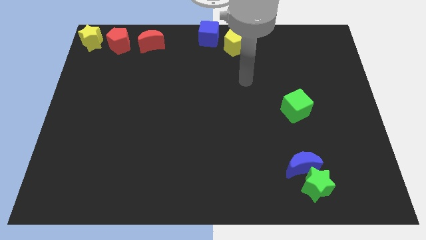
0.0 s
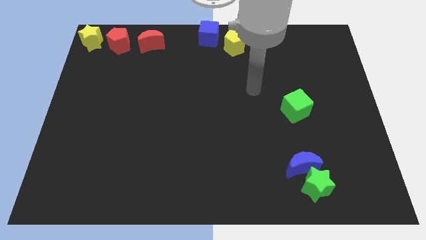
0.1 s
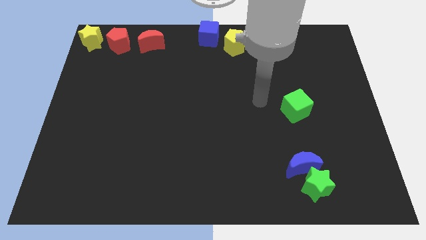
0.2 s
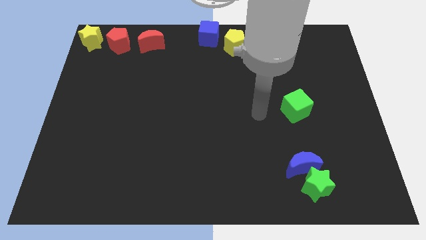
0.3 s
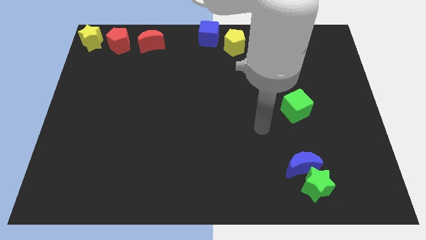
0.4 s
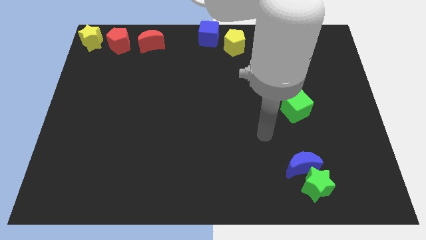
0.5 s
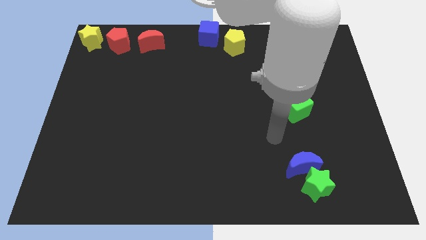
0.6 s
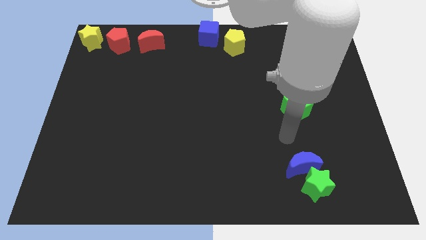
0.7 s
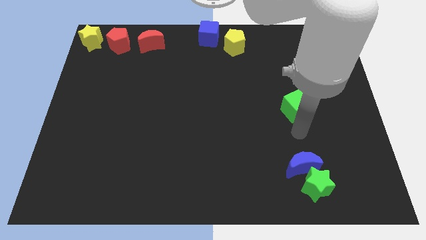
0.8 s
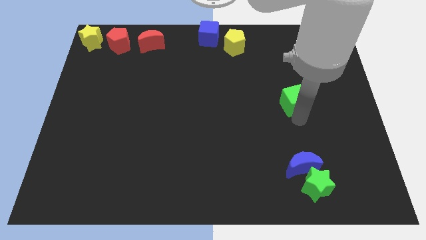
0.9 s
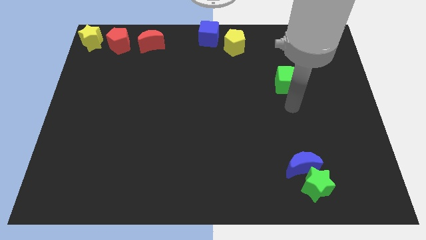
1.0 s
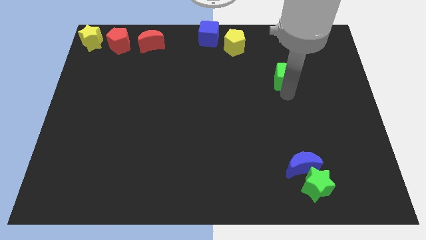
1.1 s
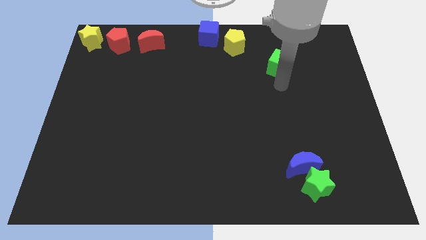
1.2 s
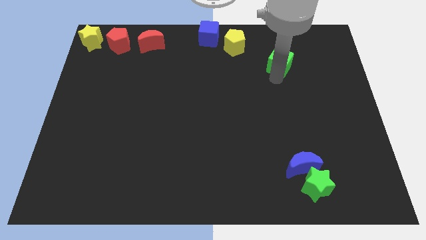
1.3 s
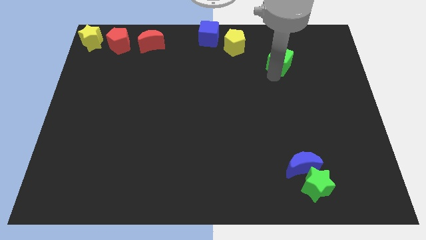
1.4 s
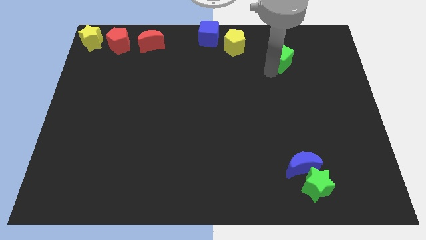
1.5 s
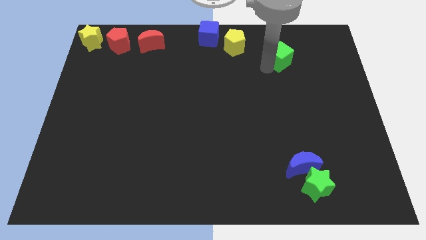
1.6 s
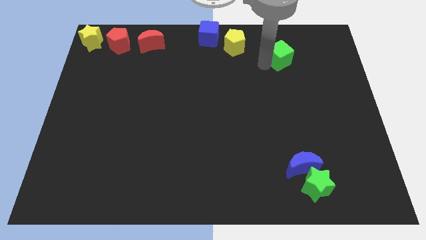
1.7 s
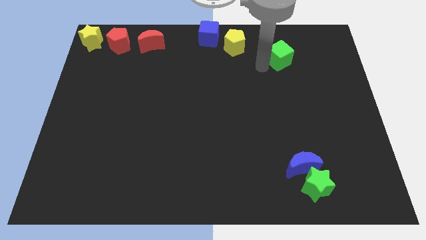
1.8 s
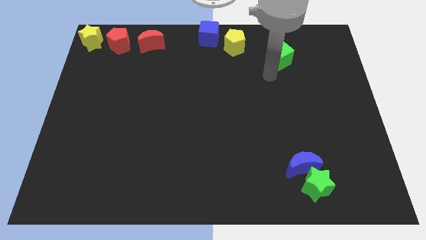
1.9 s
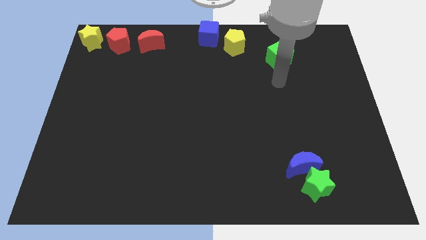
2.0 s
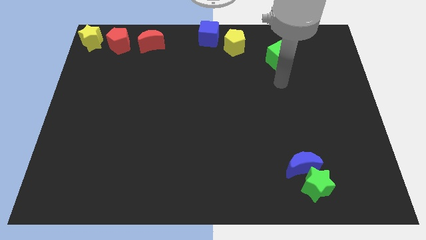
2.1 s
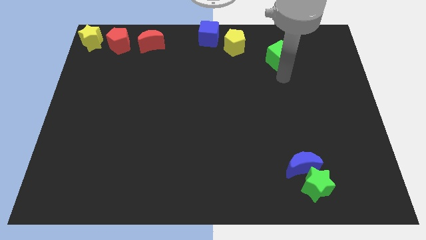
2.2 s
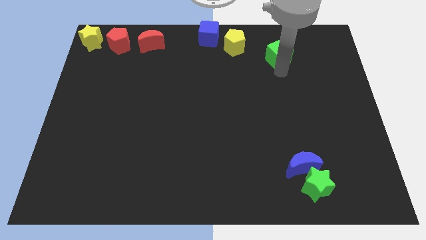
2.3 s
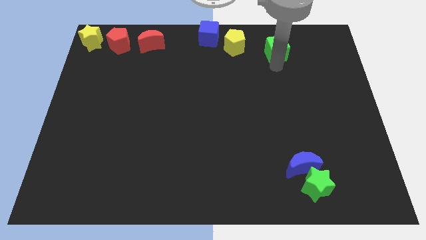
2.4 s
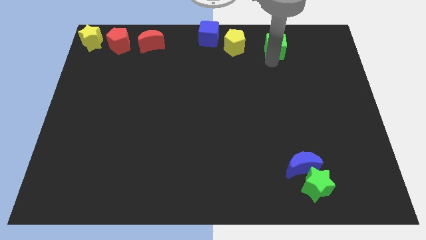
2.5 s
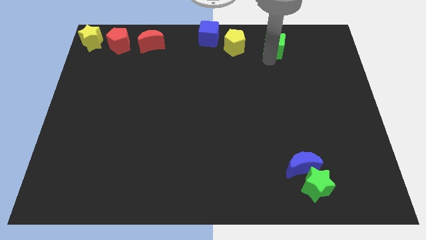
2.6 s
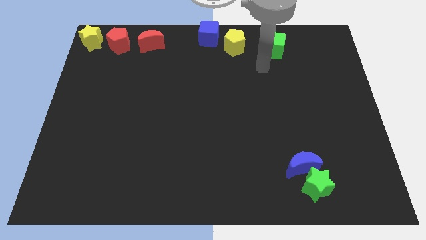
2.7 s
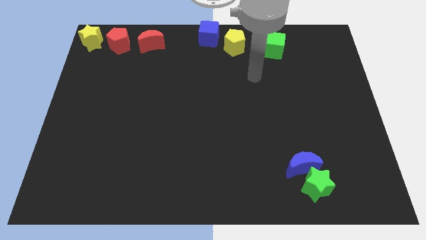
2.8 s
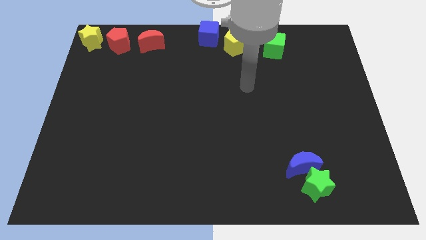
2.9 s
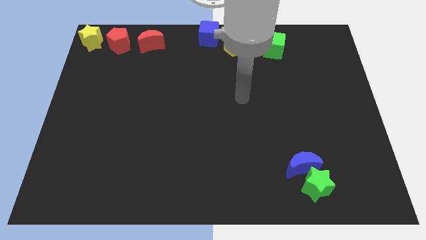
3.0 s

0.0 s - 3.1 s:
push the green cube to the right side of the yellow pentagon

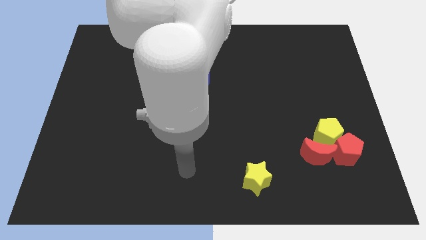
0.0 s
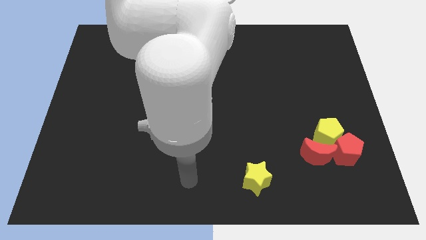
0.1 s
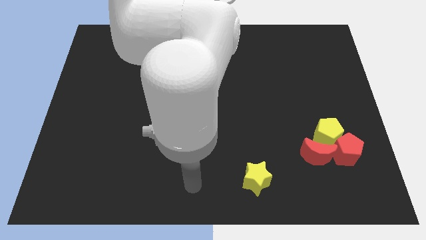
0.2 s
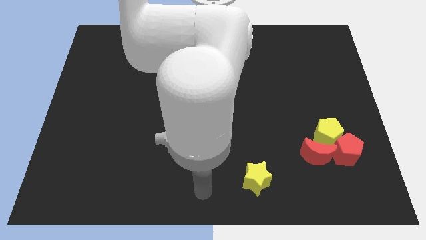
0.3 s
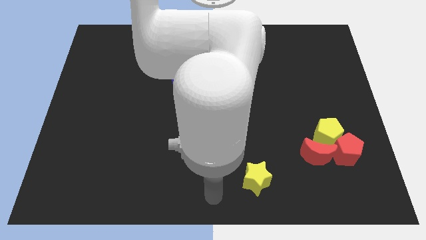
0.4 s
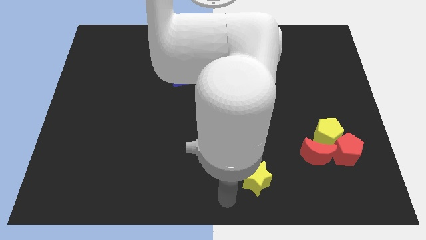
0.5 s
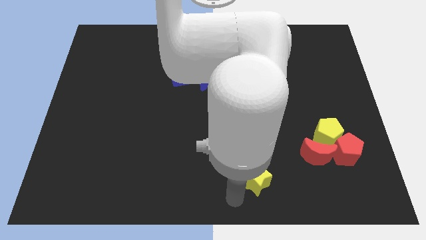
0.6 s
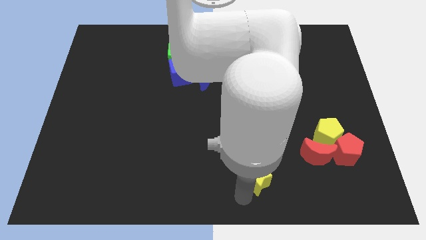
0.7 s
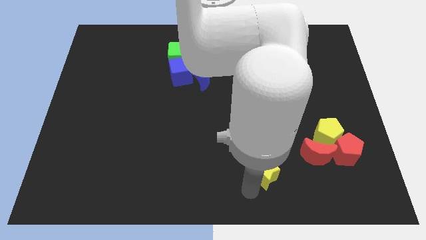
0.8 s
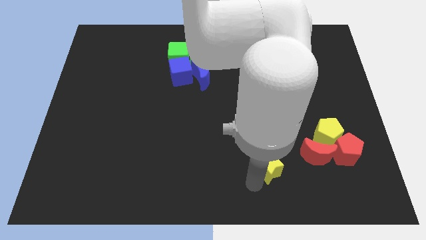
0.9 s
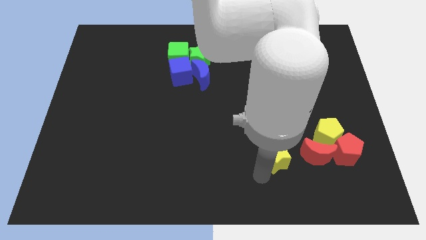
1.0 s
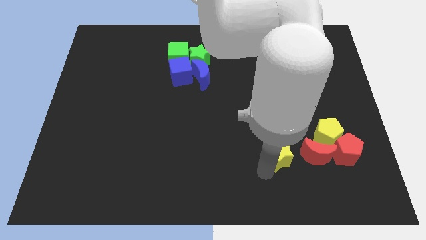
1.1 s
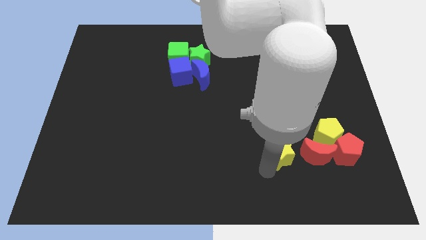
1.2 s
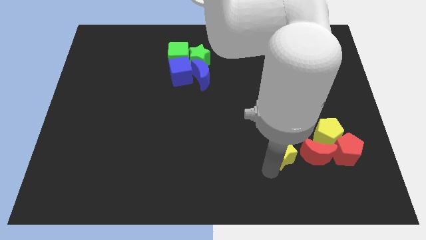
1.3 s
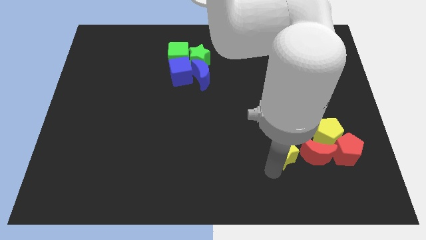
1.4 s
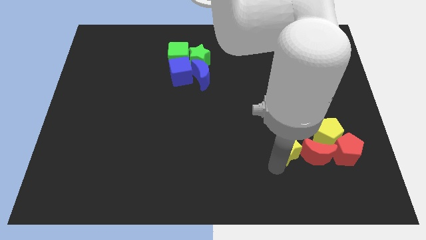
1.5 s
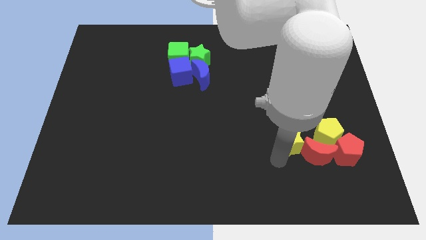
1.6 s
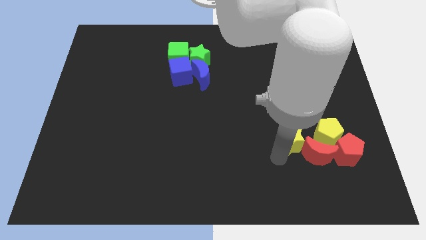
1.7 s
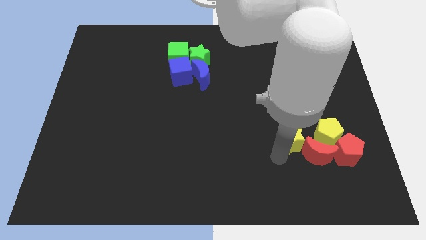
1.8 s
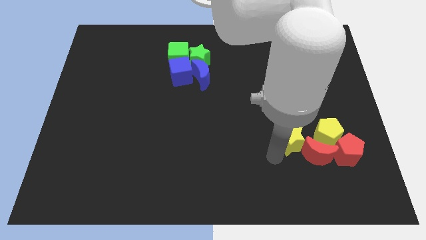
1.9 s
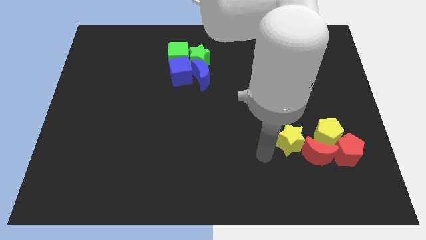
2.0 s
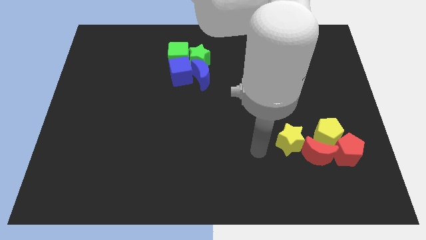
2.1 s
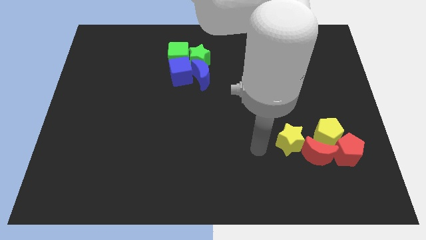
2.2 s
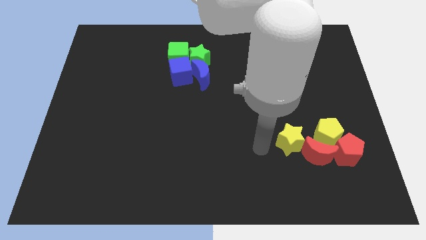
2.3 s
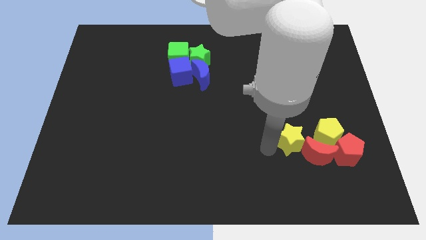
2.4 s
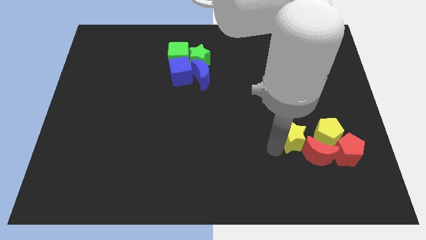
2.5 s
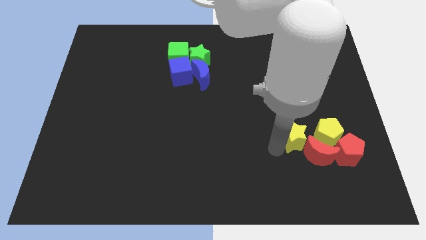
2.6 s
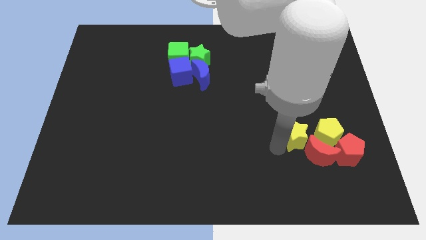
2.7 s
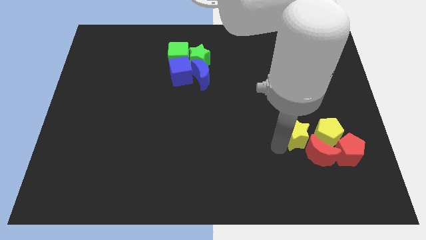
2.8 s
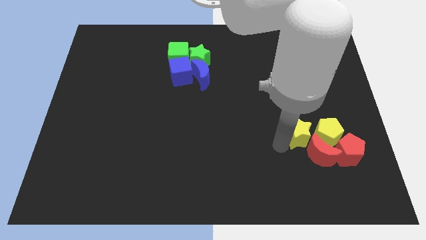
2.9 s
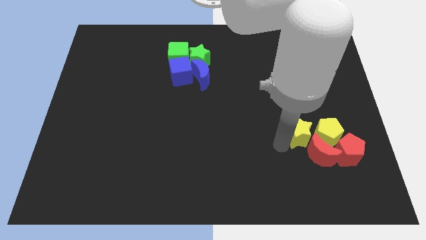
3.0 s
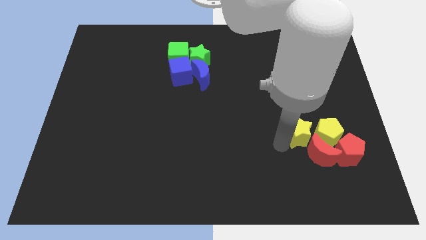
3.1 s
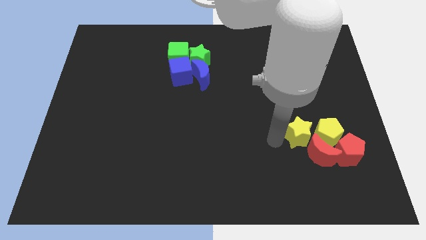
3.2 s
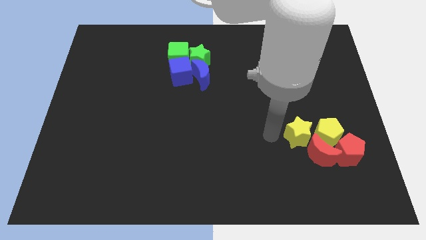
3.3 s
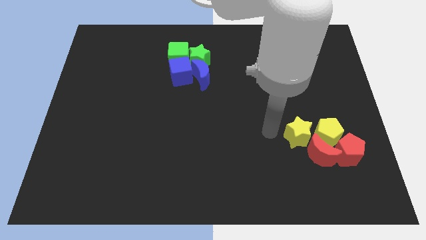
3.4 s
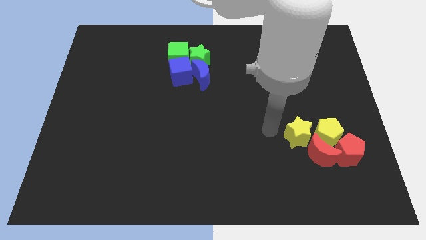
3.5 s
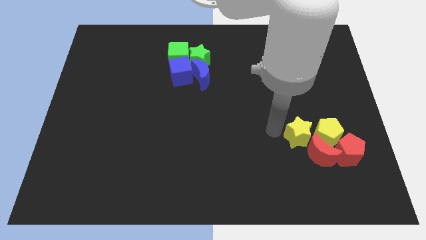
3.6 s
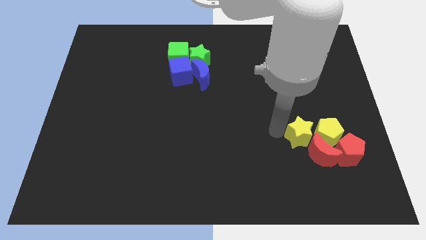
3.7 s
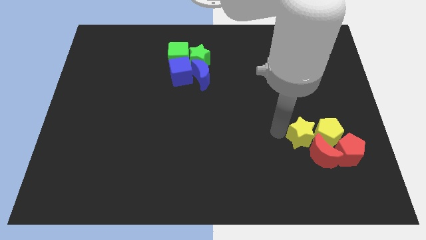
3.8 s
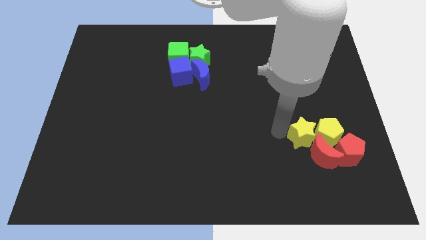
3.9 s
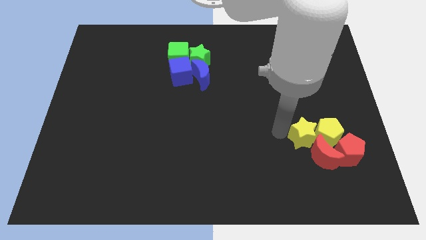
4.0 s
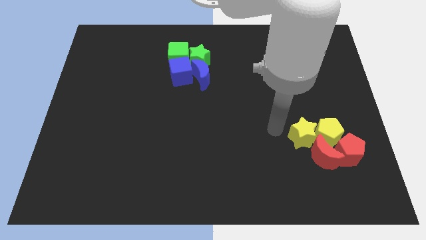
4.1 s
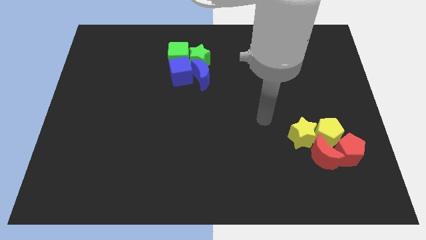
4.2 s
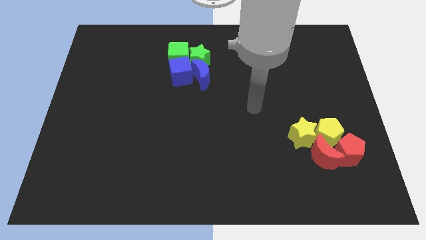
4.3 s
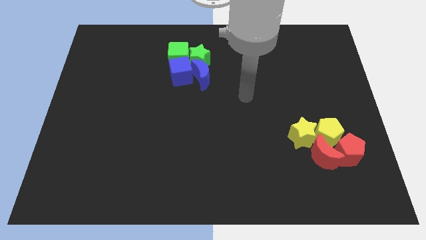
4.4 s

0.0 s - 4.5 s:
push the yellow star to the left side of the yellow pentagon

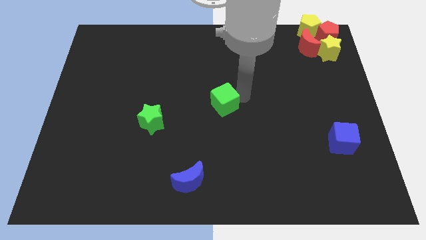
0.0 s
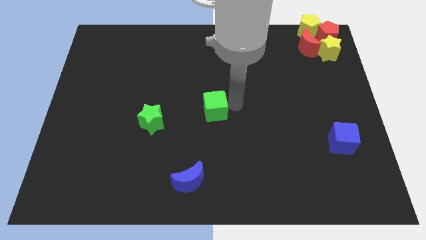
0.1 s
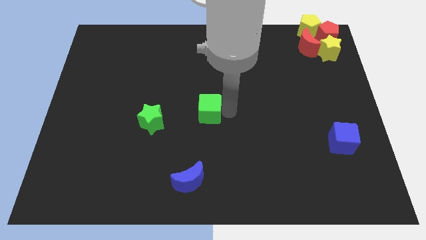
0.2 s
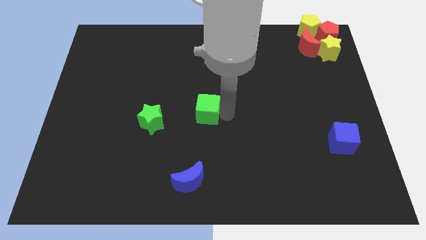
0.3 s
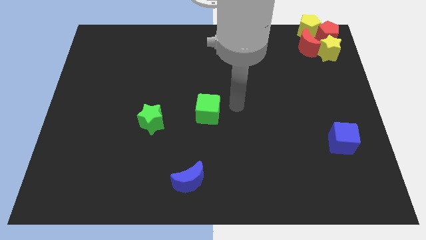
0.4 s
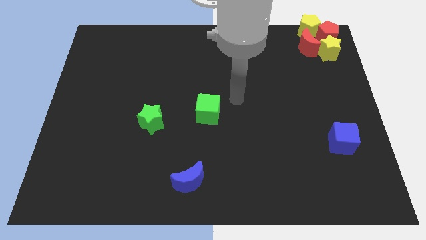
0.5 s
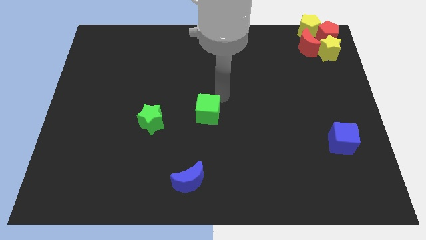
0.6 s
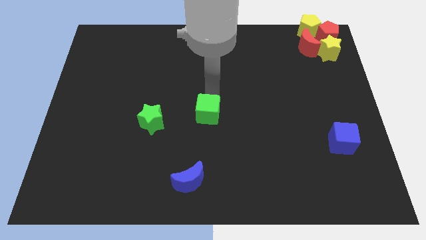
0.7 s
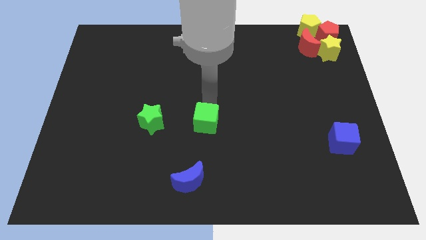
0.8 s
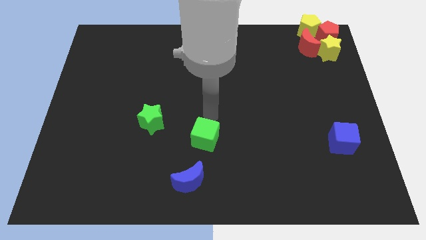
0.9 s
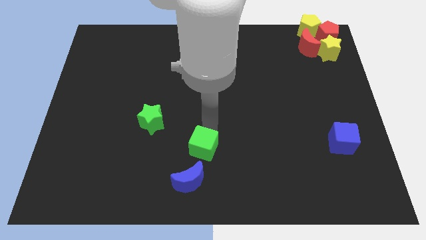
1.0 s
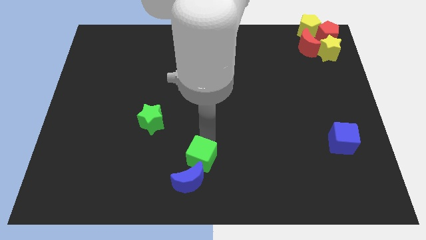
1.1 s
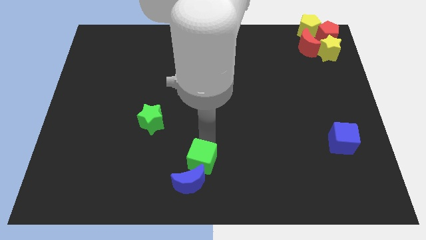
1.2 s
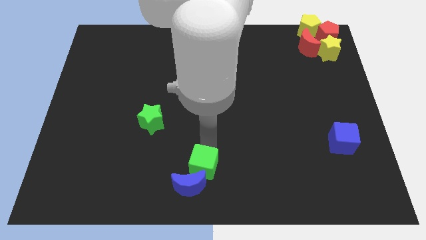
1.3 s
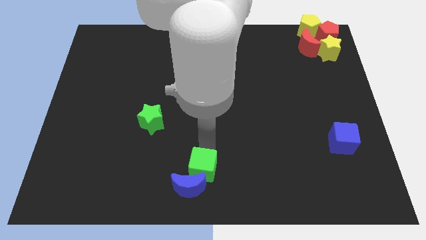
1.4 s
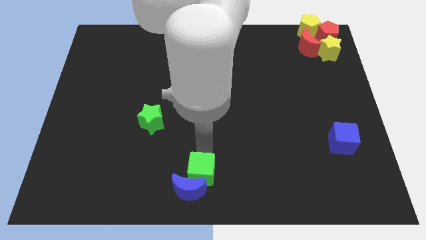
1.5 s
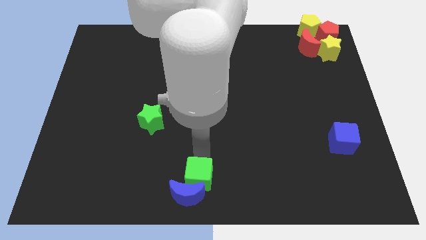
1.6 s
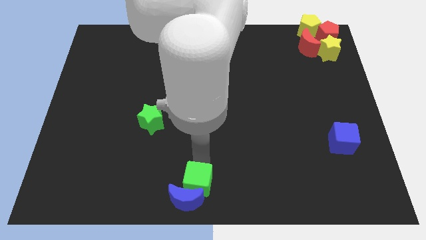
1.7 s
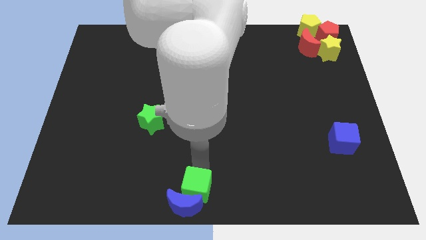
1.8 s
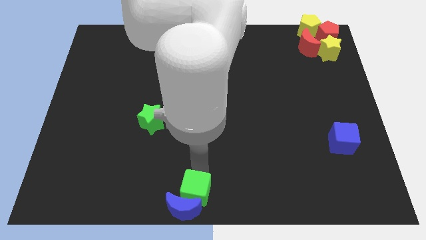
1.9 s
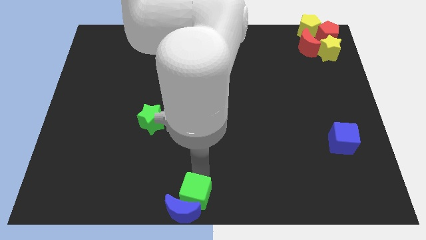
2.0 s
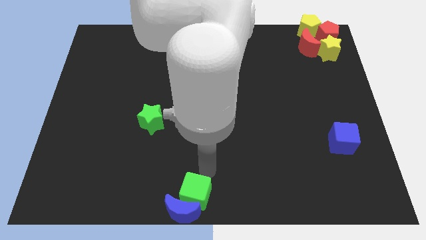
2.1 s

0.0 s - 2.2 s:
push the green cube into the blue crescent
